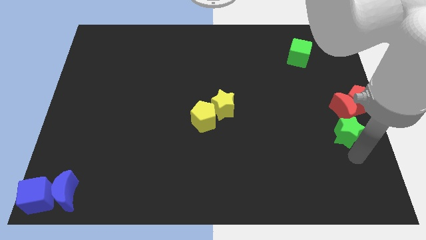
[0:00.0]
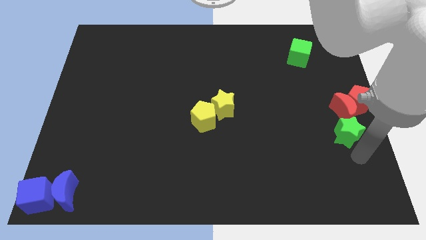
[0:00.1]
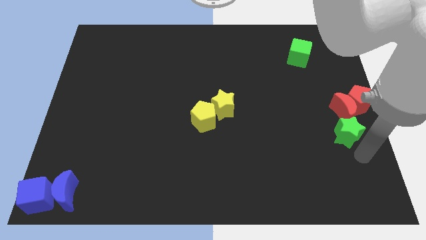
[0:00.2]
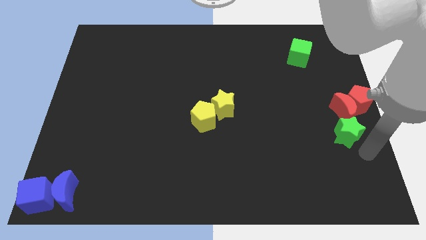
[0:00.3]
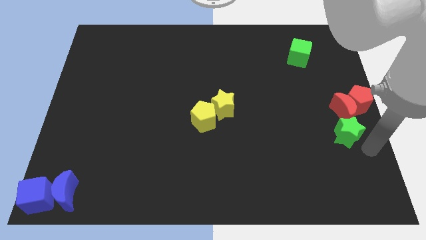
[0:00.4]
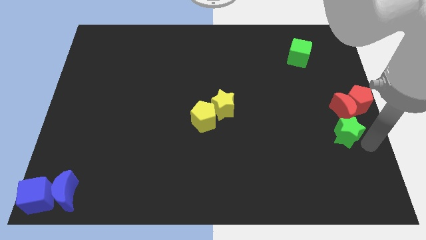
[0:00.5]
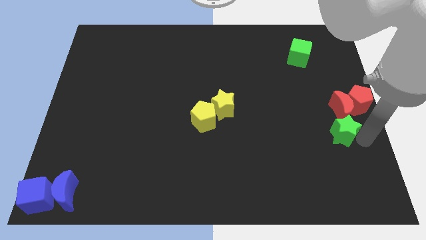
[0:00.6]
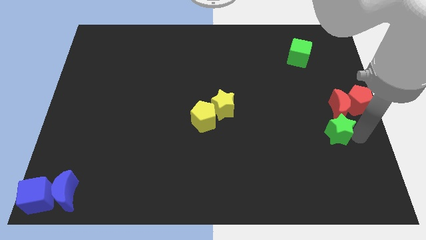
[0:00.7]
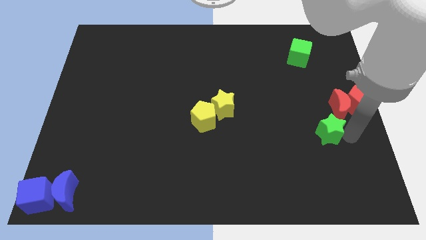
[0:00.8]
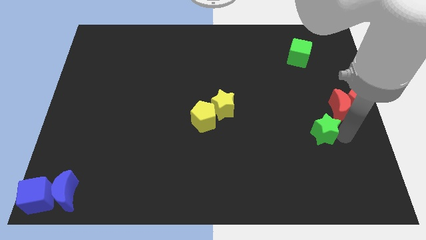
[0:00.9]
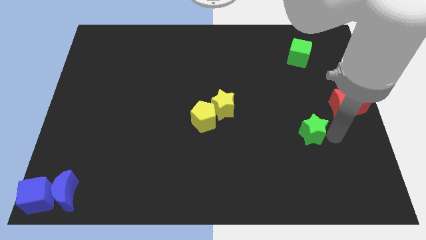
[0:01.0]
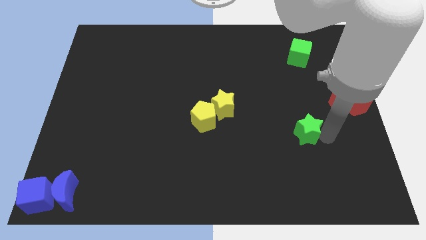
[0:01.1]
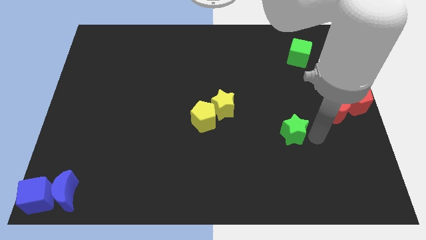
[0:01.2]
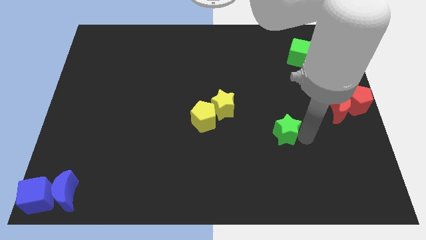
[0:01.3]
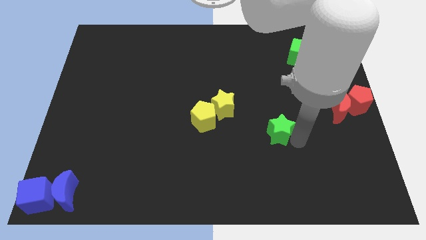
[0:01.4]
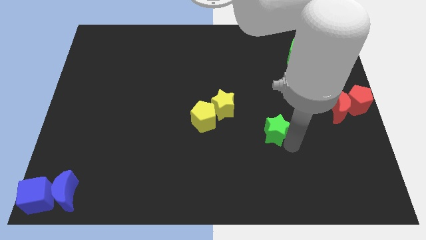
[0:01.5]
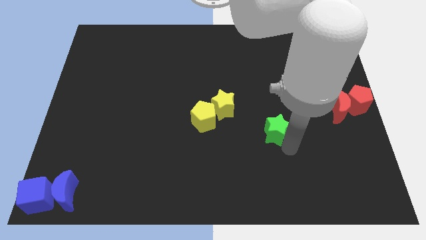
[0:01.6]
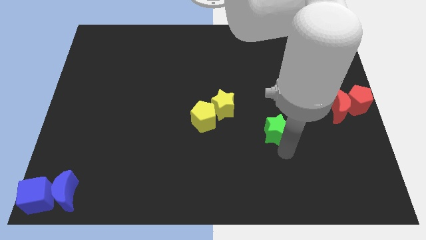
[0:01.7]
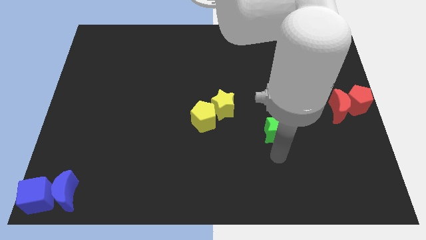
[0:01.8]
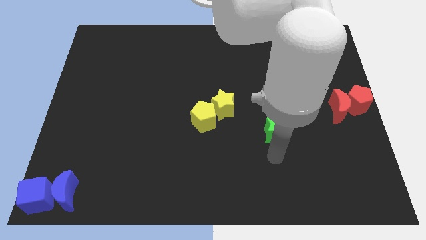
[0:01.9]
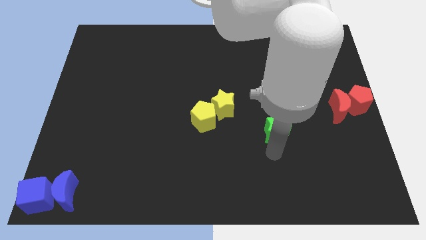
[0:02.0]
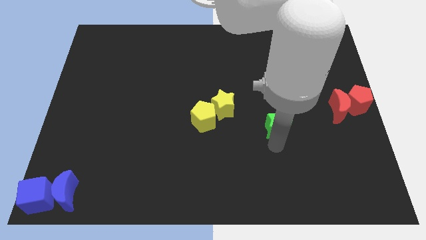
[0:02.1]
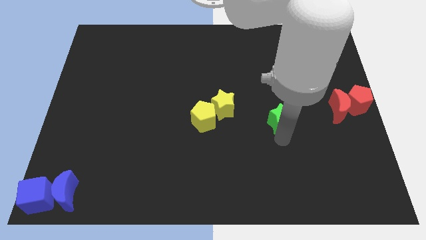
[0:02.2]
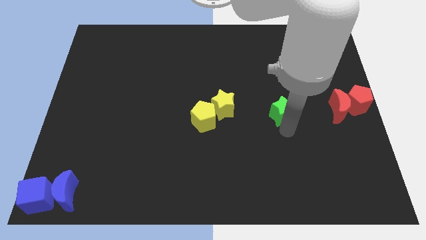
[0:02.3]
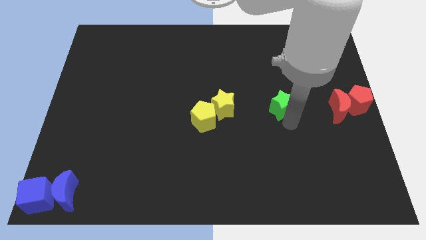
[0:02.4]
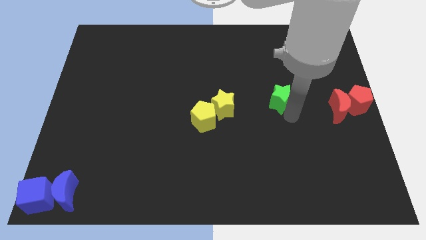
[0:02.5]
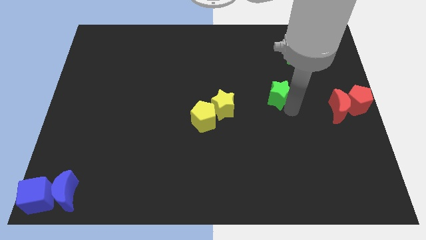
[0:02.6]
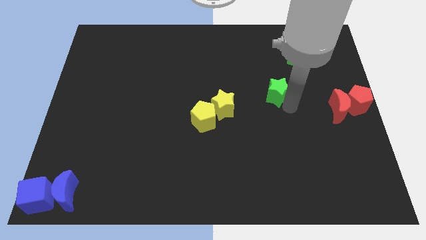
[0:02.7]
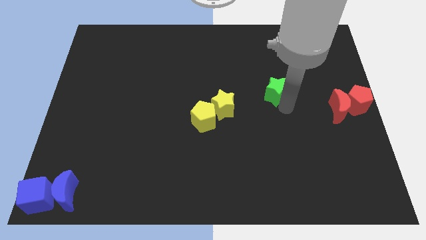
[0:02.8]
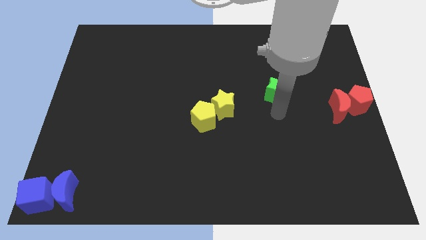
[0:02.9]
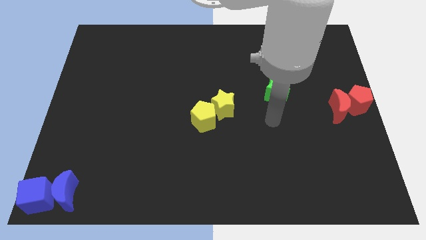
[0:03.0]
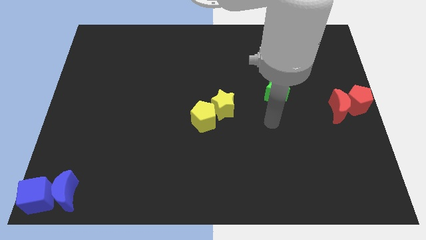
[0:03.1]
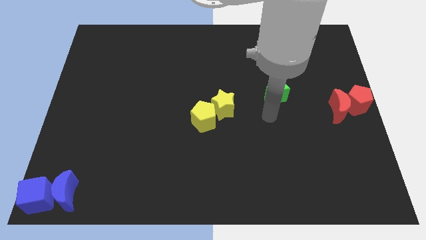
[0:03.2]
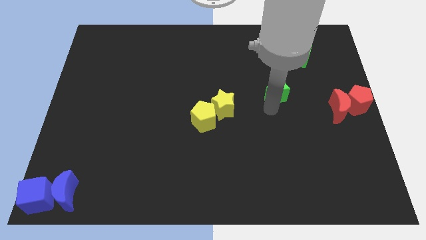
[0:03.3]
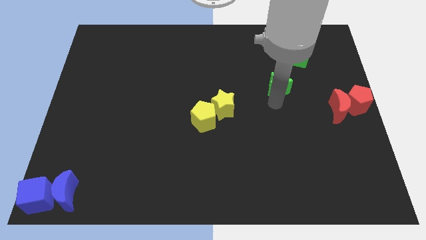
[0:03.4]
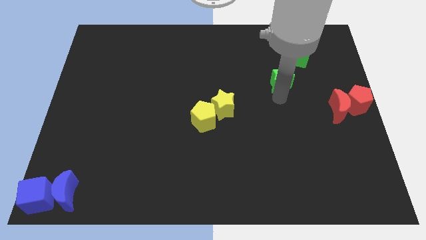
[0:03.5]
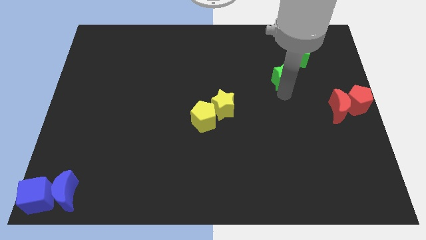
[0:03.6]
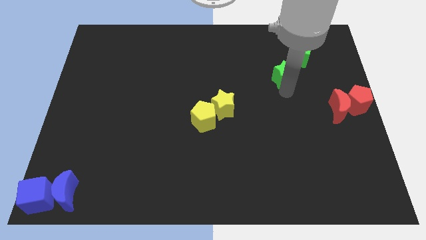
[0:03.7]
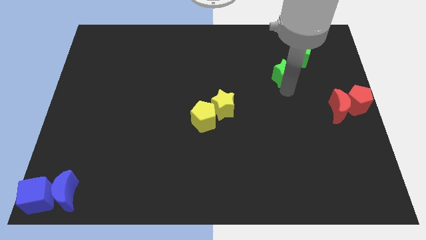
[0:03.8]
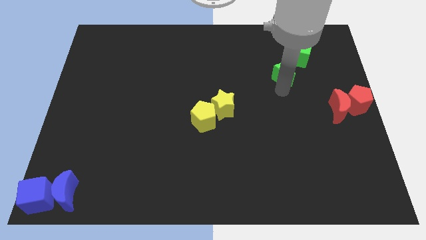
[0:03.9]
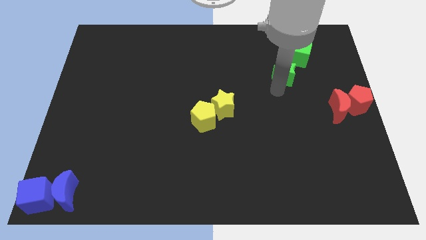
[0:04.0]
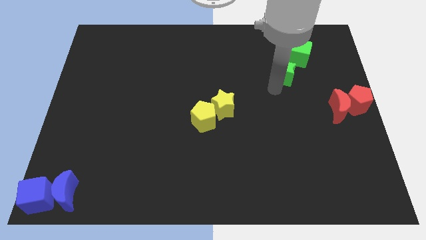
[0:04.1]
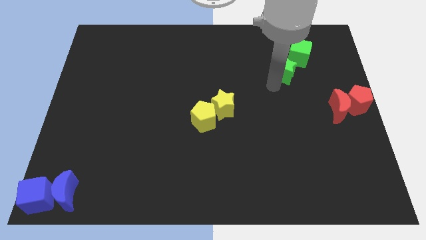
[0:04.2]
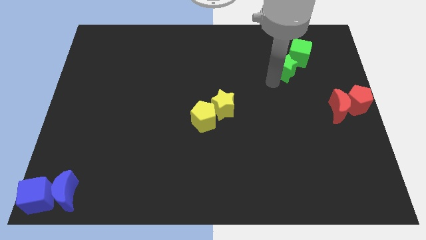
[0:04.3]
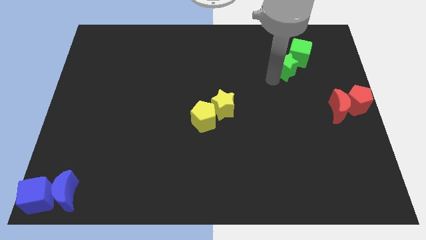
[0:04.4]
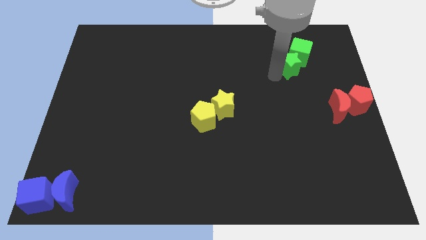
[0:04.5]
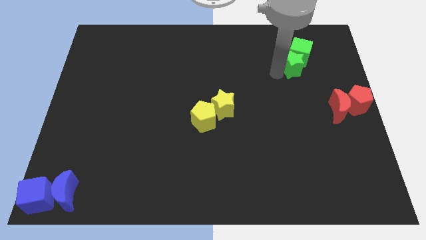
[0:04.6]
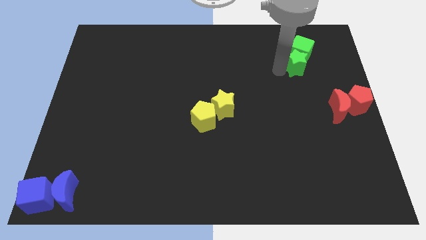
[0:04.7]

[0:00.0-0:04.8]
push green star into green cube

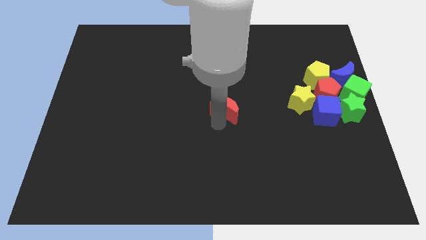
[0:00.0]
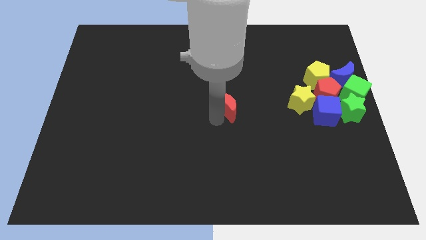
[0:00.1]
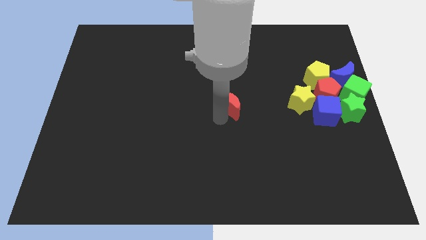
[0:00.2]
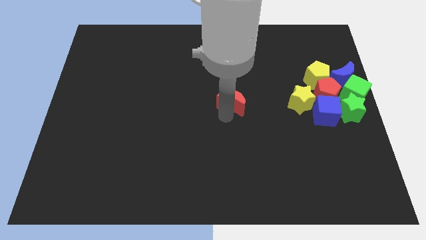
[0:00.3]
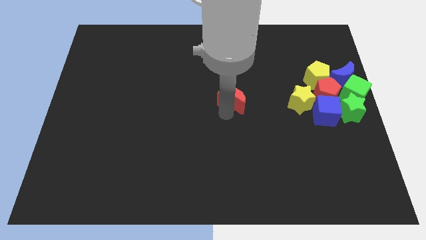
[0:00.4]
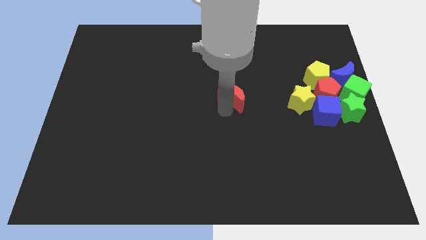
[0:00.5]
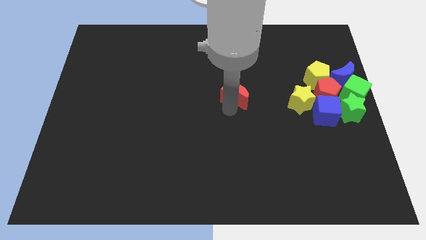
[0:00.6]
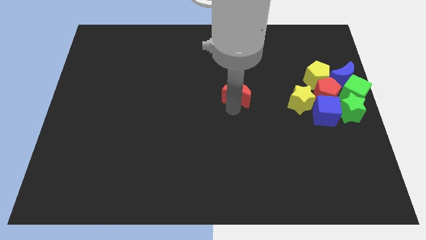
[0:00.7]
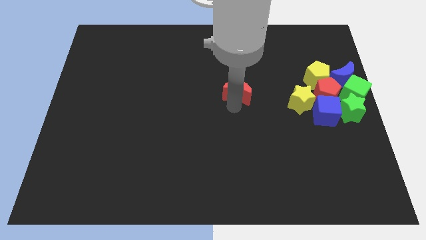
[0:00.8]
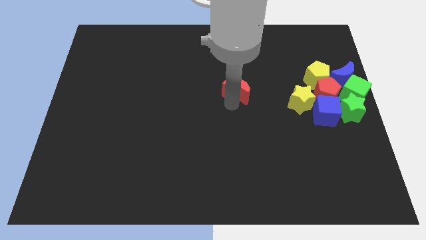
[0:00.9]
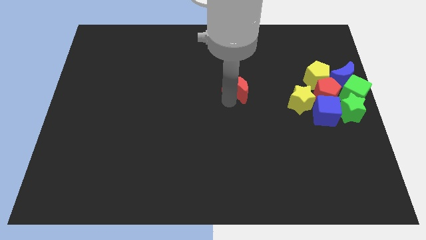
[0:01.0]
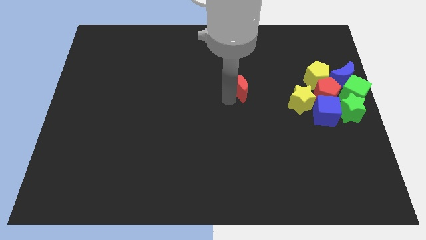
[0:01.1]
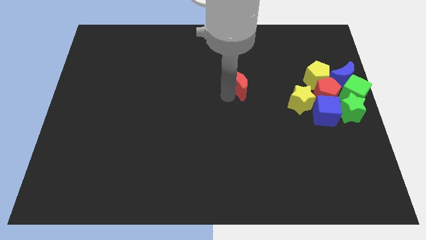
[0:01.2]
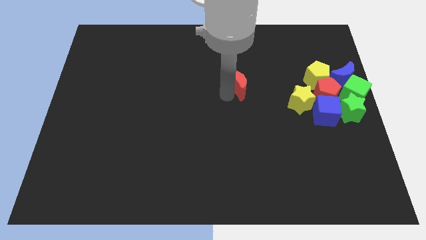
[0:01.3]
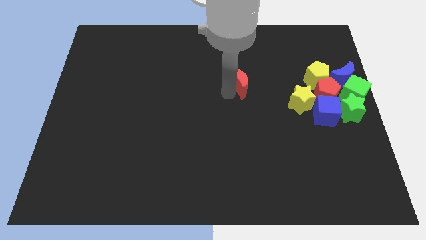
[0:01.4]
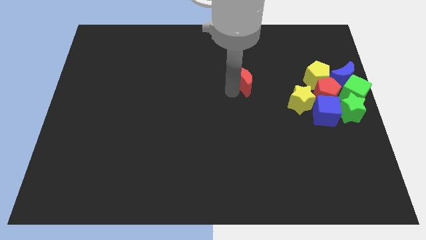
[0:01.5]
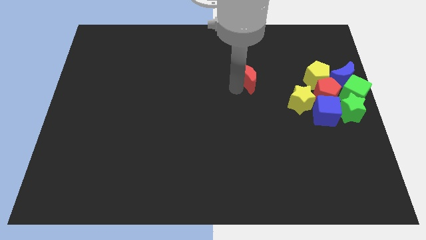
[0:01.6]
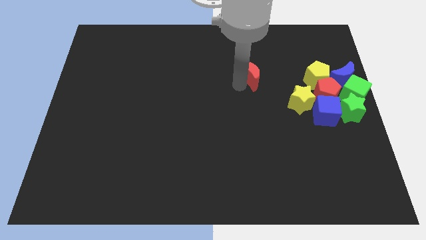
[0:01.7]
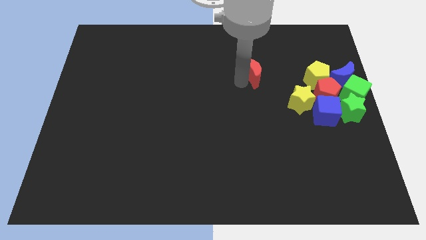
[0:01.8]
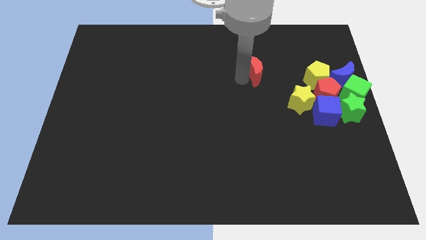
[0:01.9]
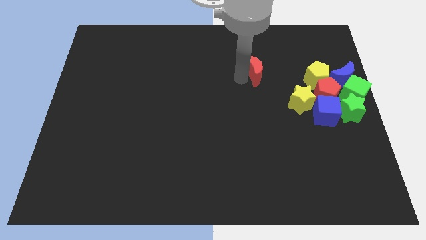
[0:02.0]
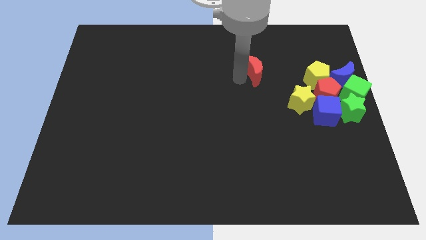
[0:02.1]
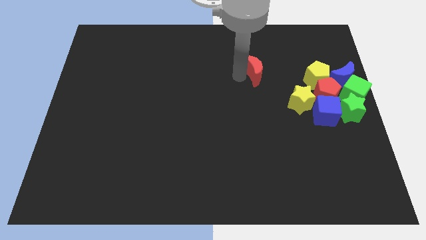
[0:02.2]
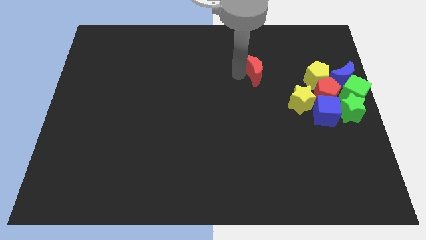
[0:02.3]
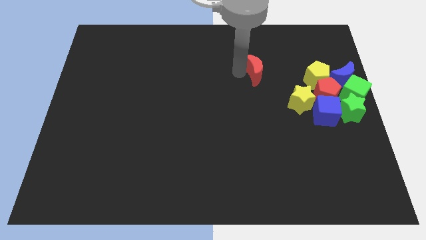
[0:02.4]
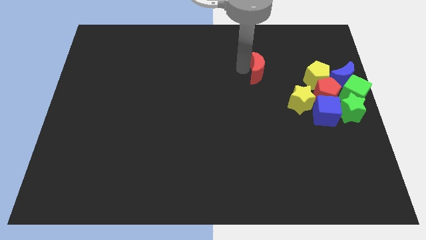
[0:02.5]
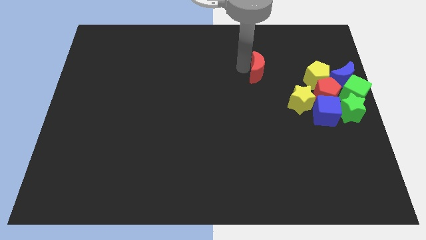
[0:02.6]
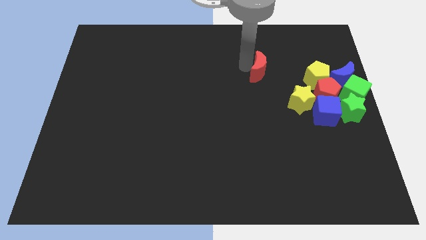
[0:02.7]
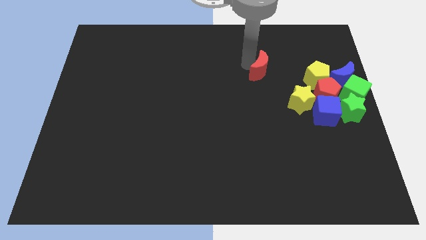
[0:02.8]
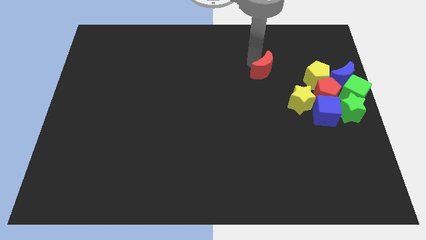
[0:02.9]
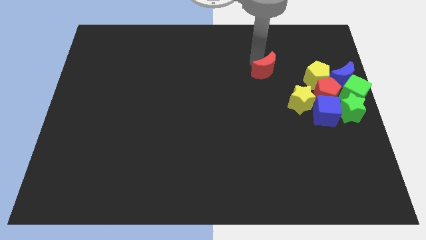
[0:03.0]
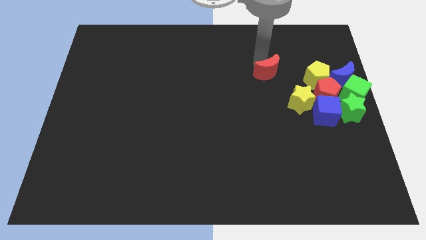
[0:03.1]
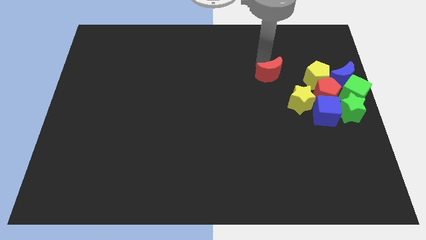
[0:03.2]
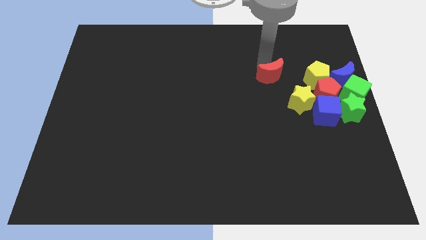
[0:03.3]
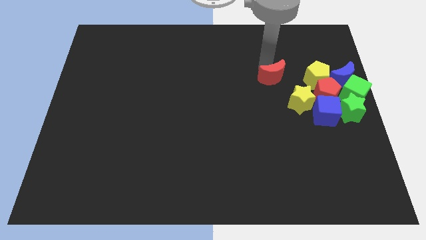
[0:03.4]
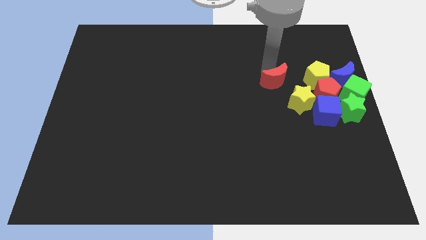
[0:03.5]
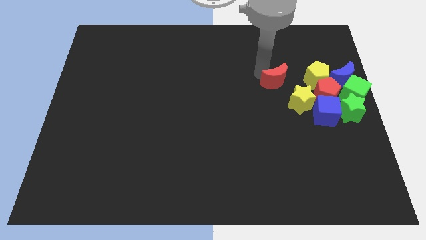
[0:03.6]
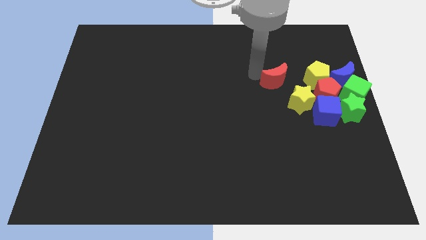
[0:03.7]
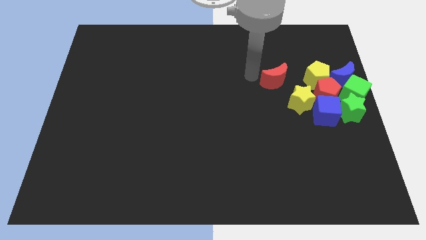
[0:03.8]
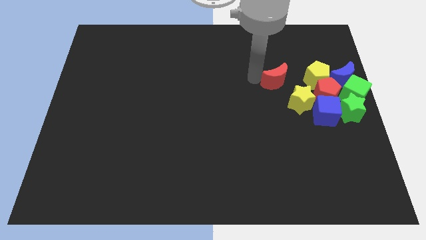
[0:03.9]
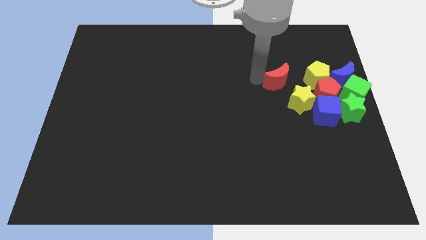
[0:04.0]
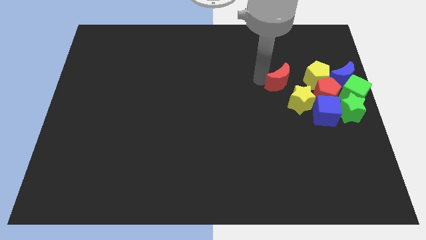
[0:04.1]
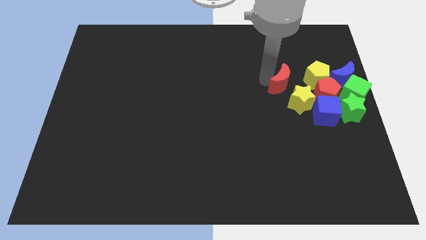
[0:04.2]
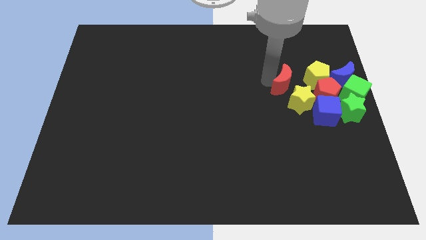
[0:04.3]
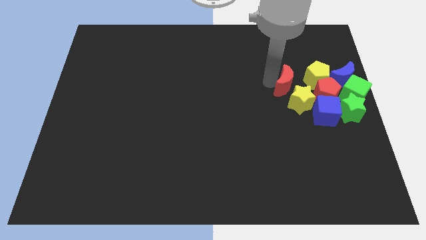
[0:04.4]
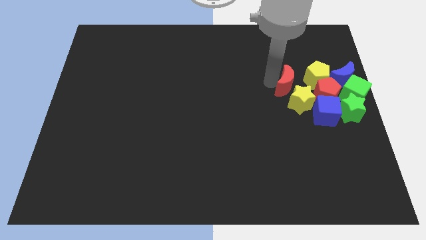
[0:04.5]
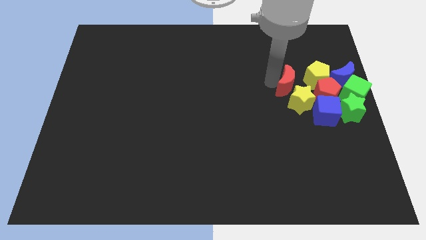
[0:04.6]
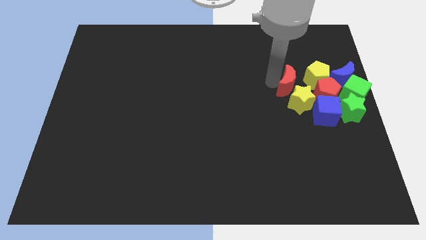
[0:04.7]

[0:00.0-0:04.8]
put the red crescent top left corner to the yellow star
